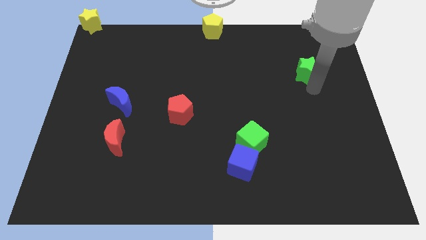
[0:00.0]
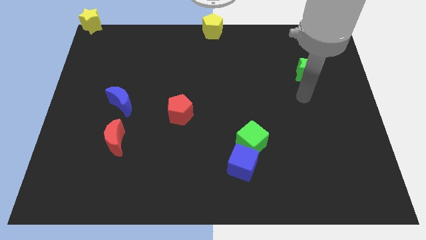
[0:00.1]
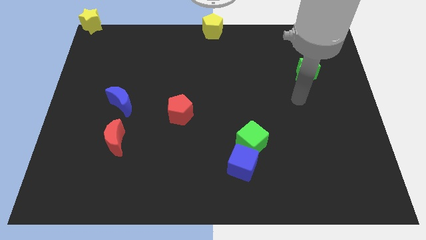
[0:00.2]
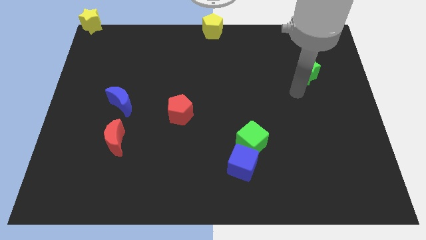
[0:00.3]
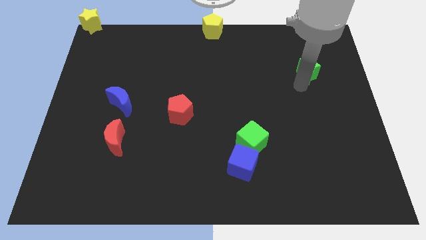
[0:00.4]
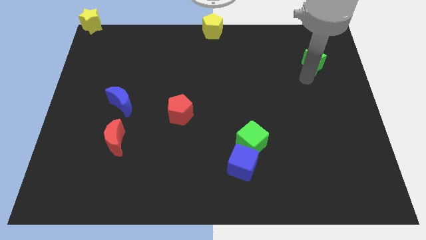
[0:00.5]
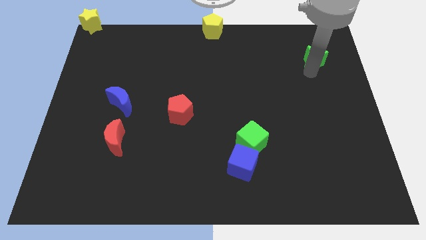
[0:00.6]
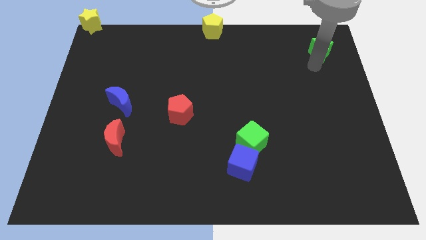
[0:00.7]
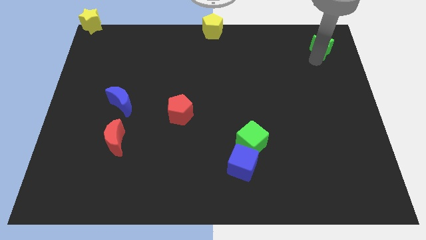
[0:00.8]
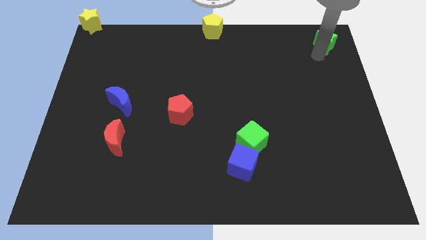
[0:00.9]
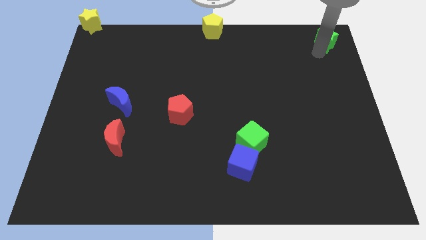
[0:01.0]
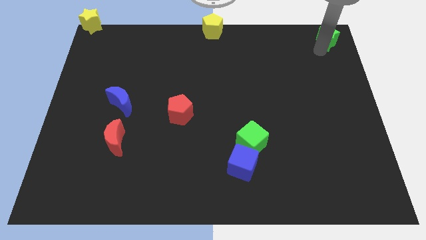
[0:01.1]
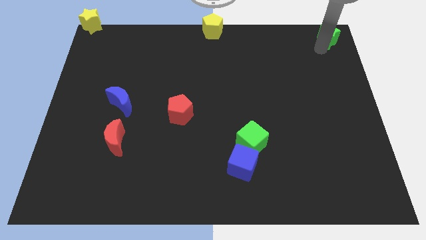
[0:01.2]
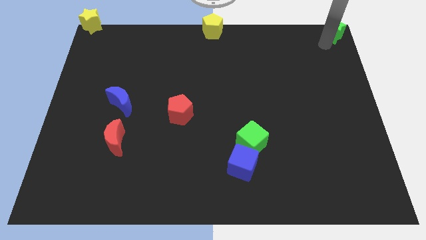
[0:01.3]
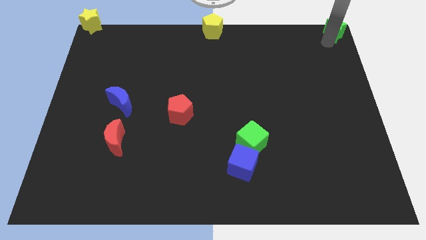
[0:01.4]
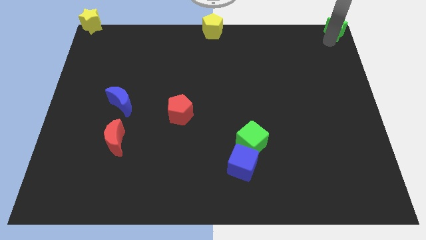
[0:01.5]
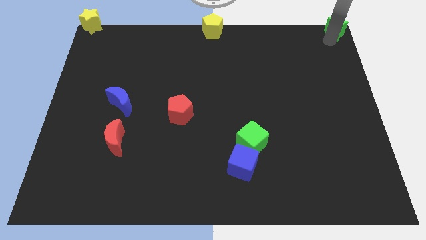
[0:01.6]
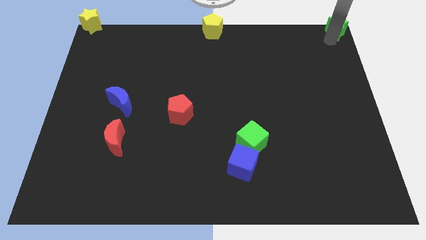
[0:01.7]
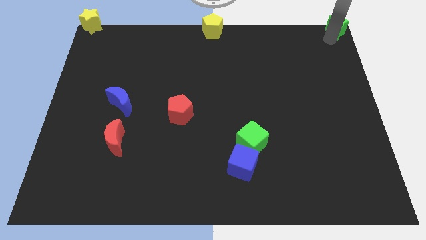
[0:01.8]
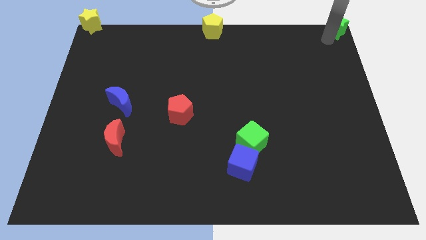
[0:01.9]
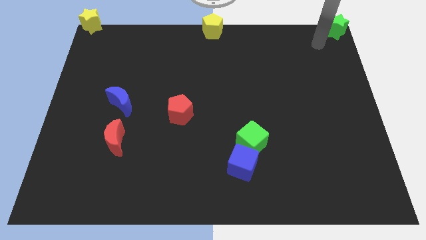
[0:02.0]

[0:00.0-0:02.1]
push green star to the top right corner

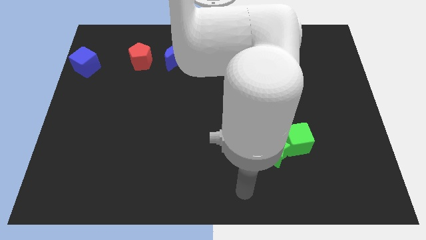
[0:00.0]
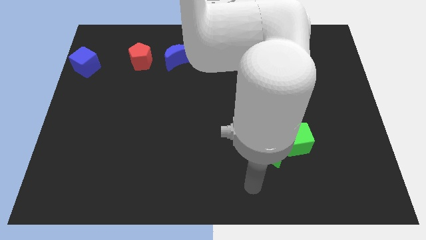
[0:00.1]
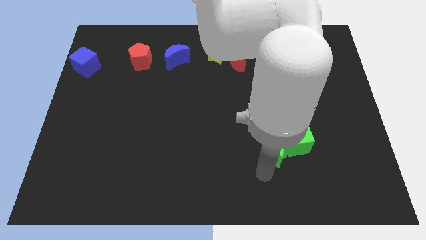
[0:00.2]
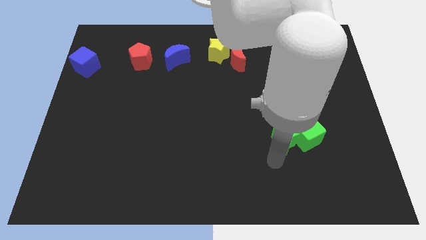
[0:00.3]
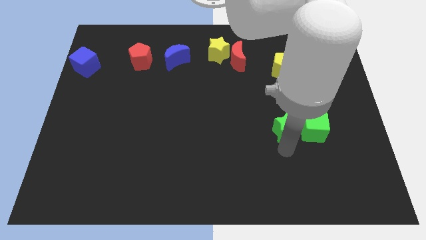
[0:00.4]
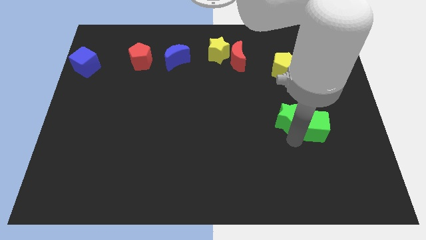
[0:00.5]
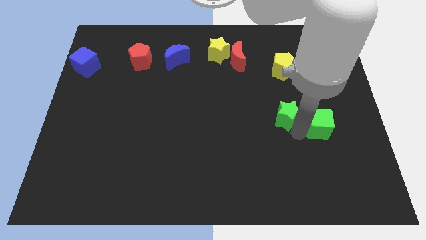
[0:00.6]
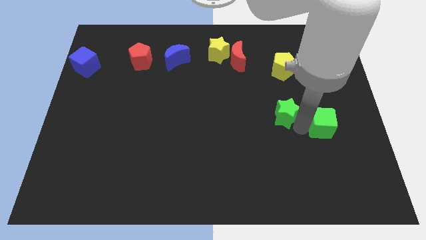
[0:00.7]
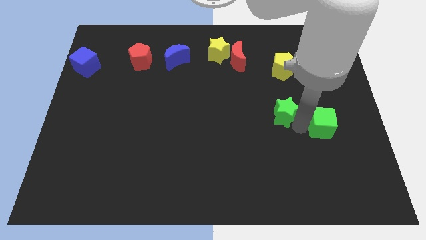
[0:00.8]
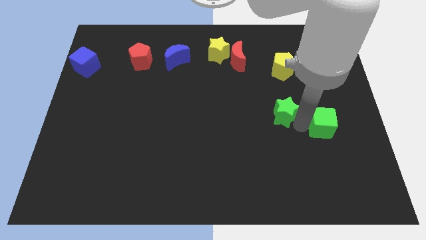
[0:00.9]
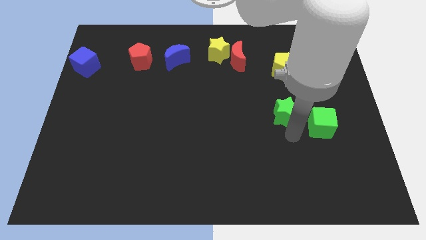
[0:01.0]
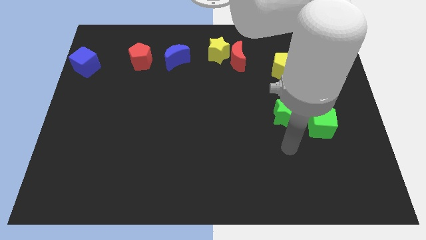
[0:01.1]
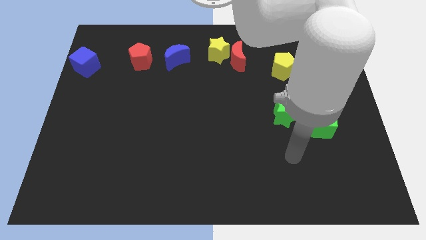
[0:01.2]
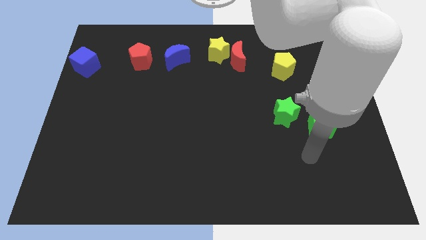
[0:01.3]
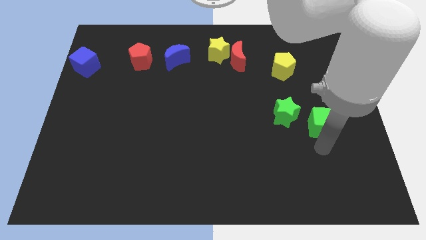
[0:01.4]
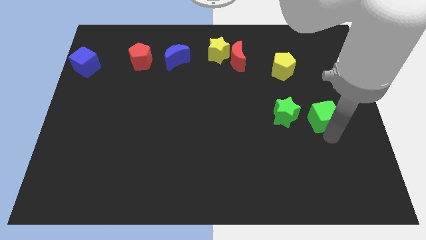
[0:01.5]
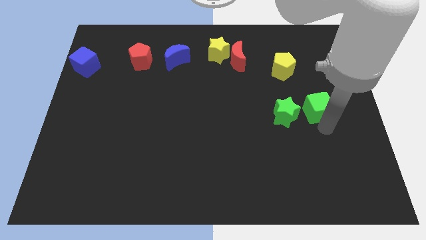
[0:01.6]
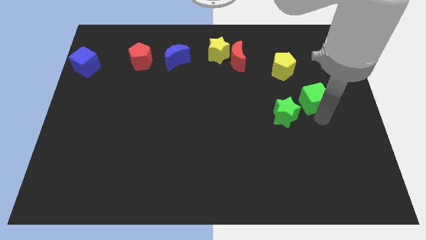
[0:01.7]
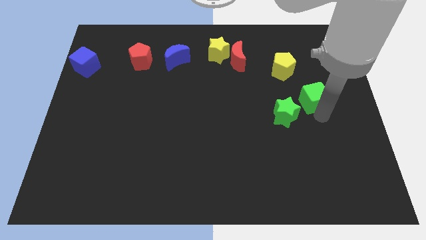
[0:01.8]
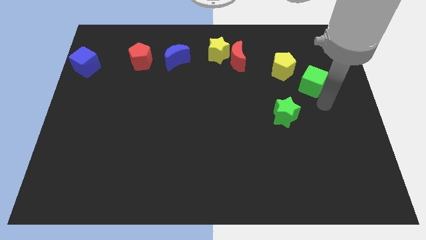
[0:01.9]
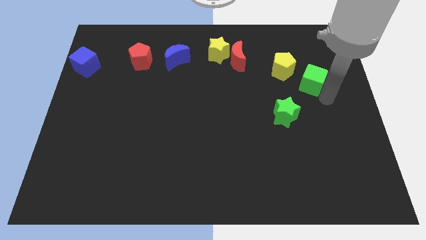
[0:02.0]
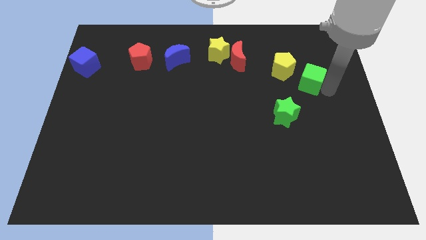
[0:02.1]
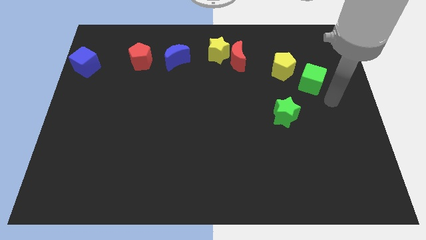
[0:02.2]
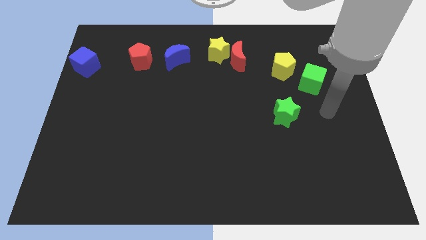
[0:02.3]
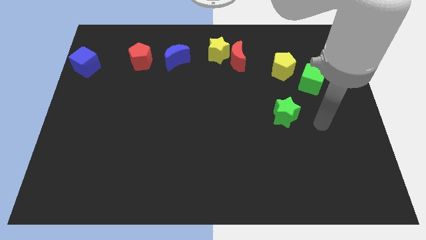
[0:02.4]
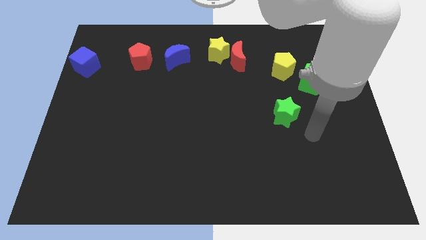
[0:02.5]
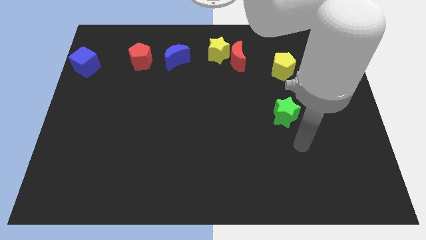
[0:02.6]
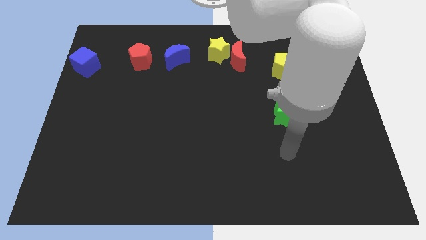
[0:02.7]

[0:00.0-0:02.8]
move the green cube to the right of the yellow pentagon

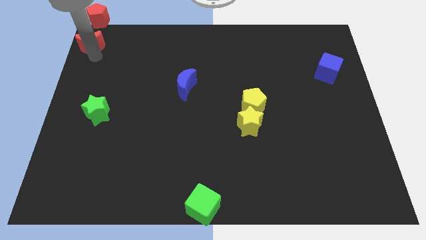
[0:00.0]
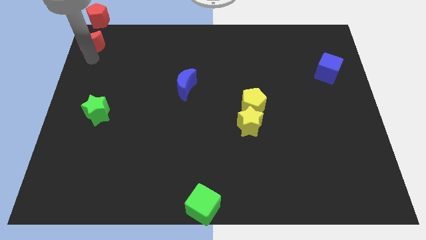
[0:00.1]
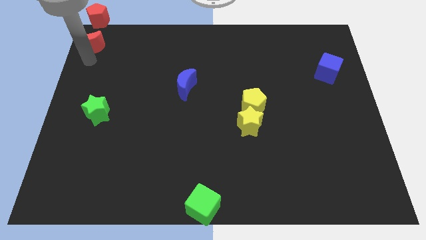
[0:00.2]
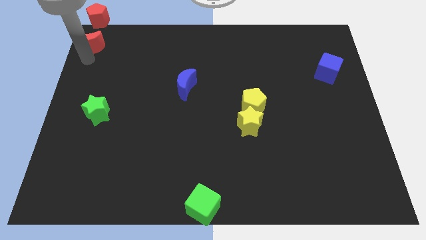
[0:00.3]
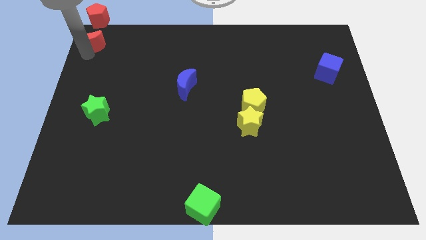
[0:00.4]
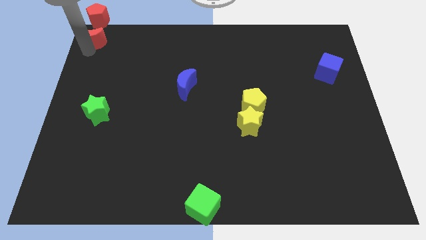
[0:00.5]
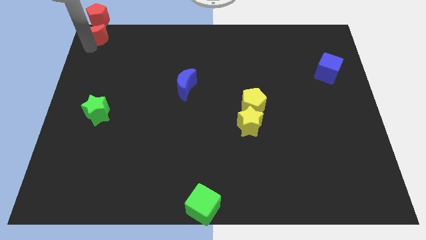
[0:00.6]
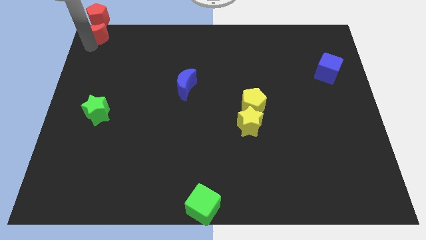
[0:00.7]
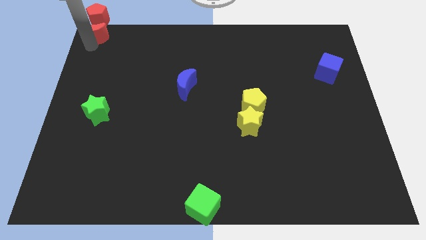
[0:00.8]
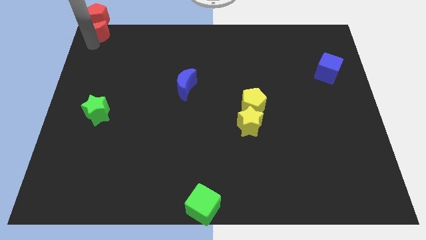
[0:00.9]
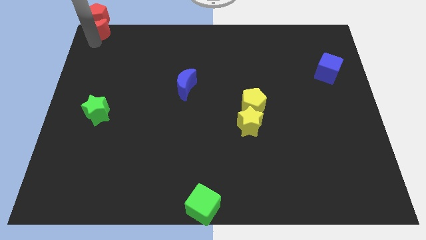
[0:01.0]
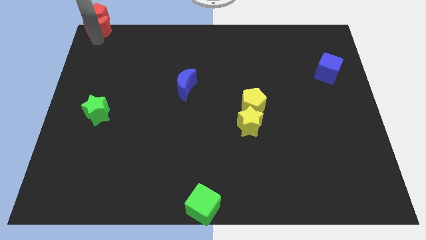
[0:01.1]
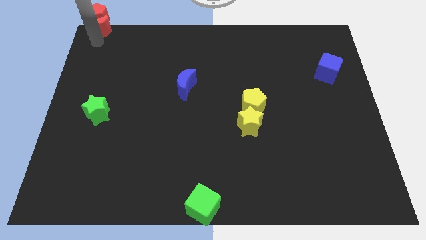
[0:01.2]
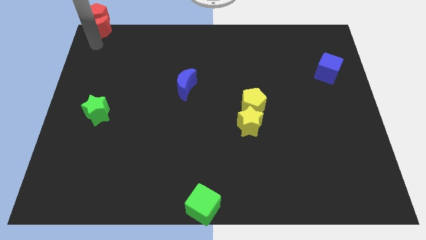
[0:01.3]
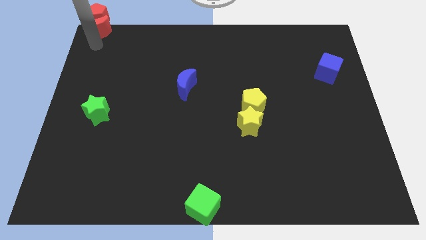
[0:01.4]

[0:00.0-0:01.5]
push the red moon into the red pentagon

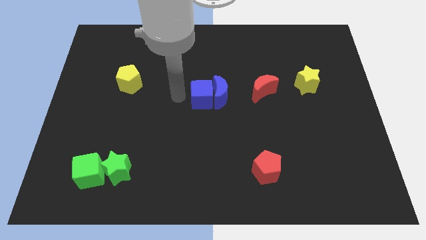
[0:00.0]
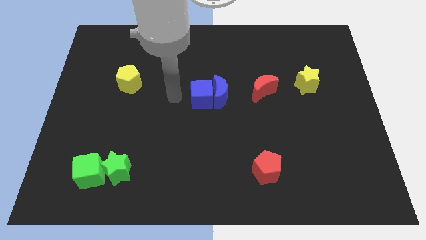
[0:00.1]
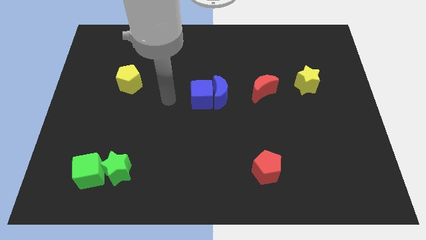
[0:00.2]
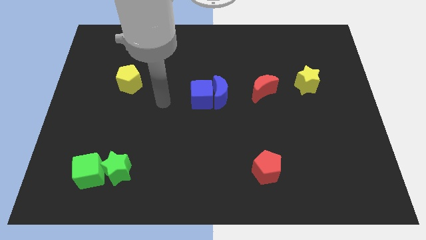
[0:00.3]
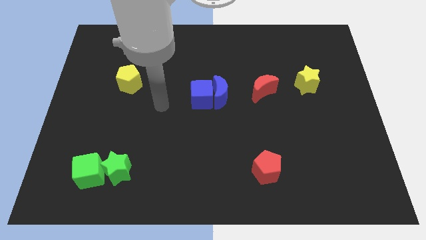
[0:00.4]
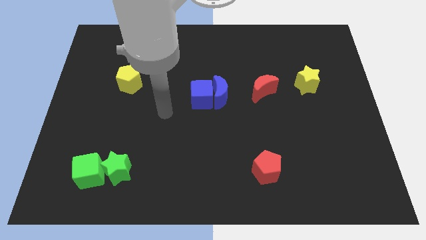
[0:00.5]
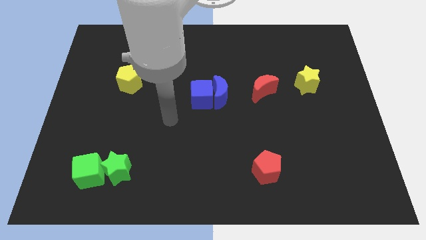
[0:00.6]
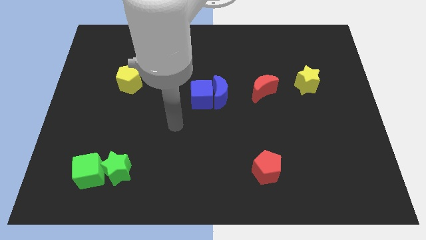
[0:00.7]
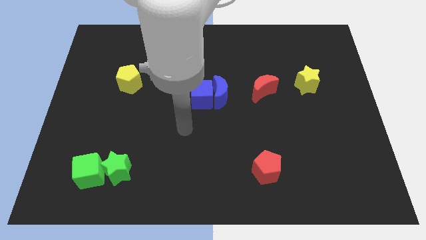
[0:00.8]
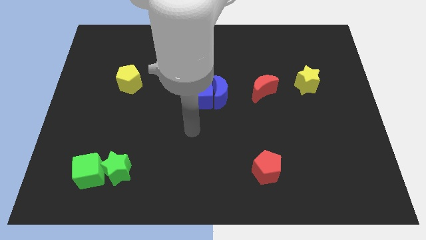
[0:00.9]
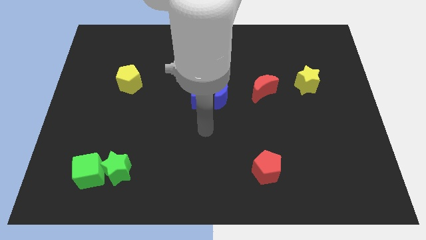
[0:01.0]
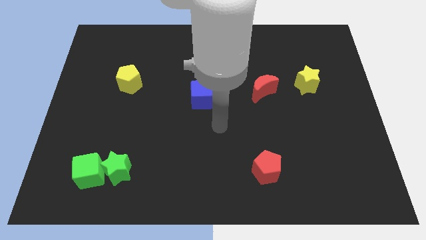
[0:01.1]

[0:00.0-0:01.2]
move your arm to the bottom of the blue crescent

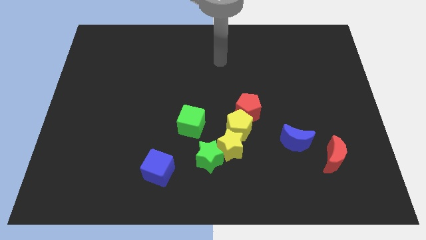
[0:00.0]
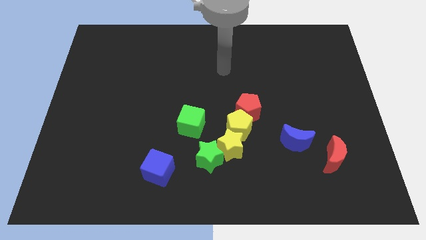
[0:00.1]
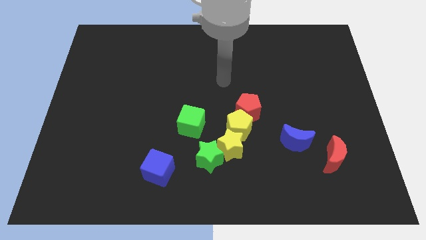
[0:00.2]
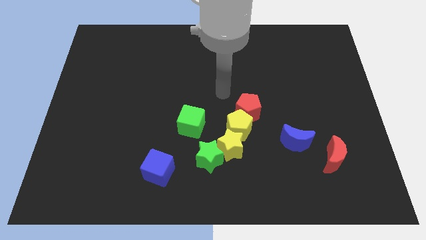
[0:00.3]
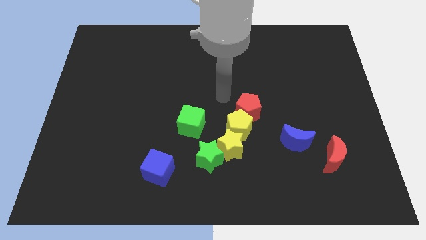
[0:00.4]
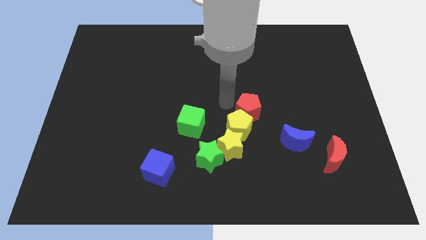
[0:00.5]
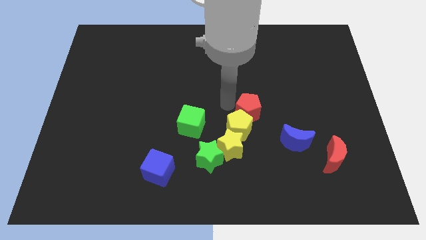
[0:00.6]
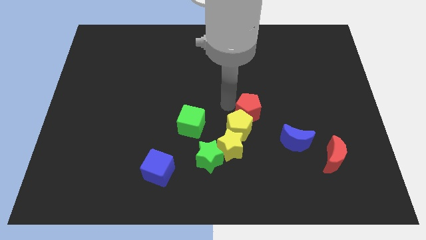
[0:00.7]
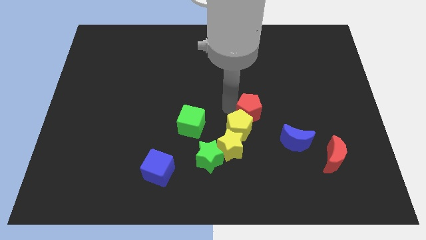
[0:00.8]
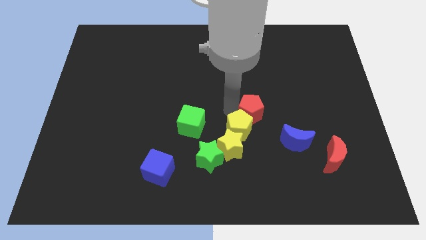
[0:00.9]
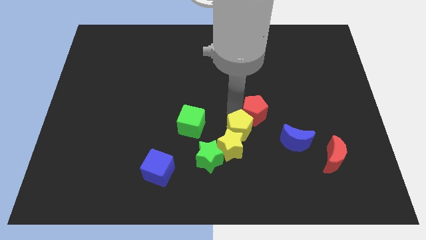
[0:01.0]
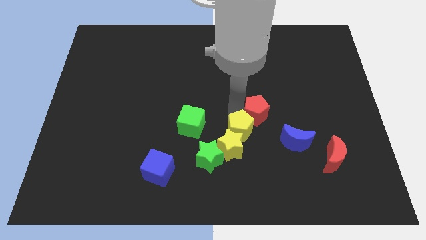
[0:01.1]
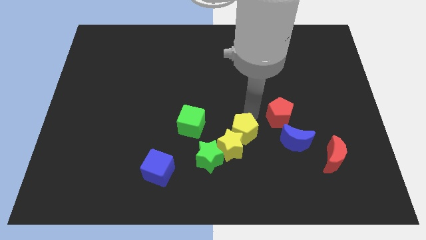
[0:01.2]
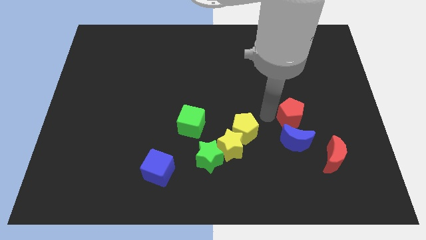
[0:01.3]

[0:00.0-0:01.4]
separate the yellow pentagon and red pentagon
